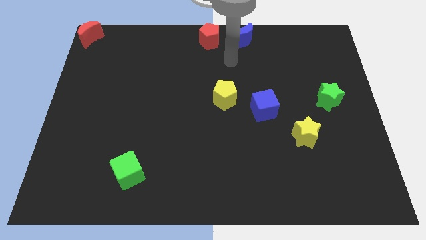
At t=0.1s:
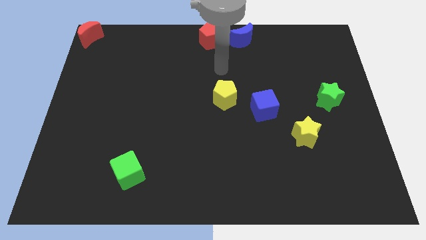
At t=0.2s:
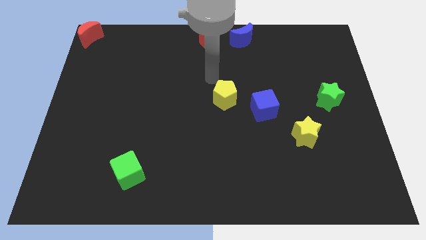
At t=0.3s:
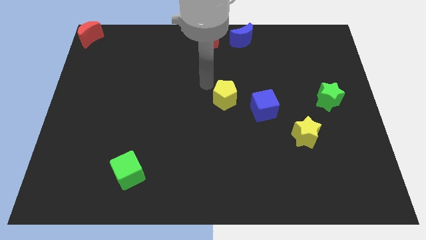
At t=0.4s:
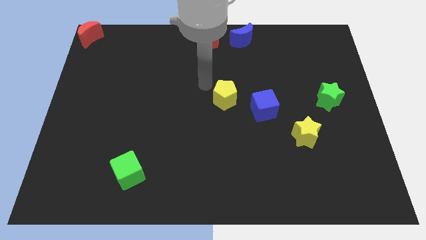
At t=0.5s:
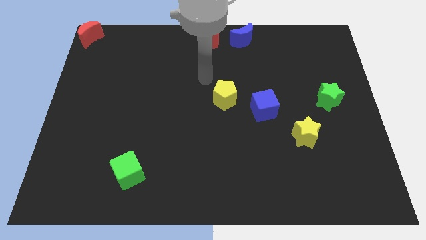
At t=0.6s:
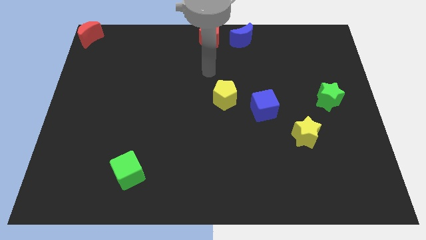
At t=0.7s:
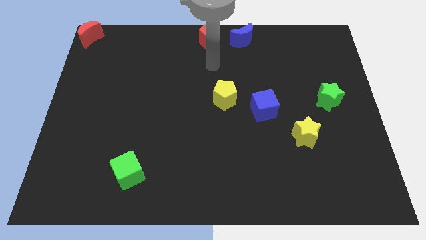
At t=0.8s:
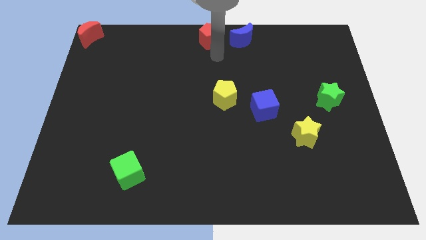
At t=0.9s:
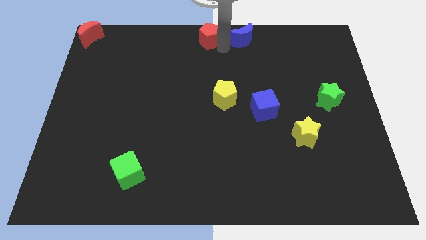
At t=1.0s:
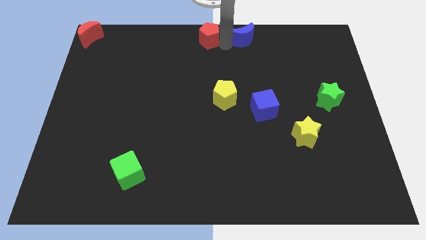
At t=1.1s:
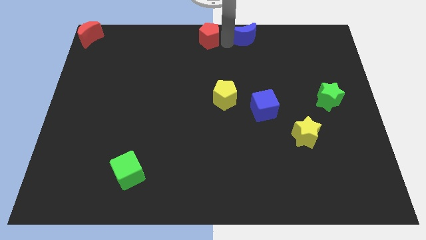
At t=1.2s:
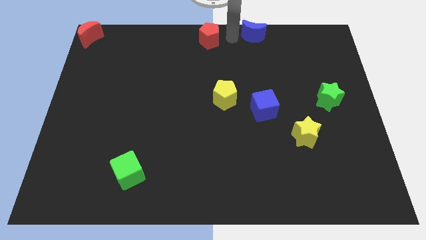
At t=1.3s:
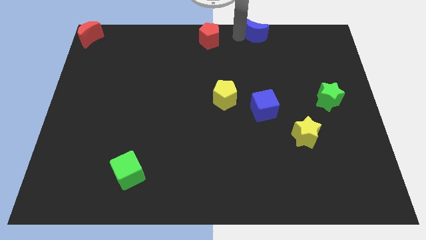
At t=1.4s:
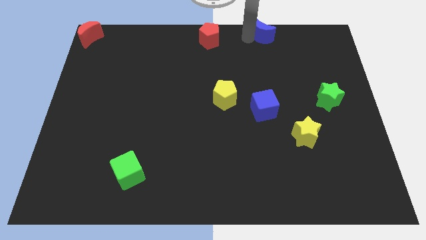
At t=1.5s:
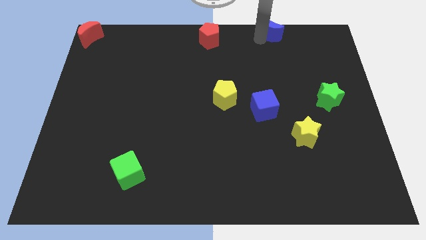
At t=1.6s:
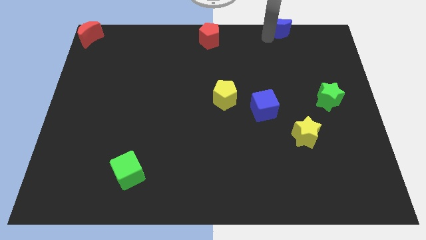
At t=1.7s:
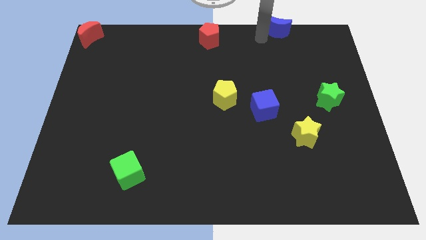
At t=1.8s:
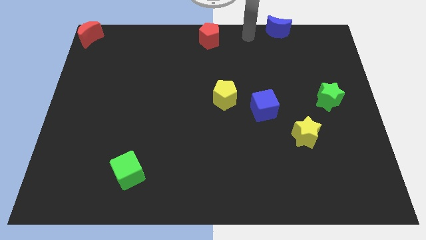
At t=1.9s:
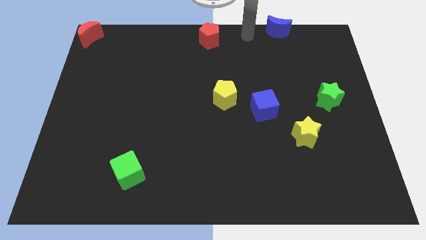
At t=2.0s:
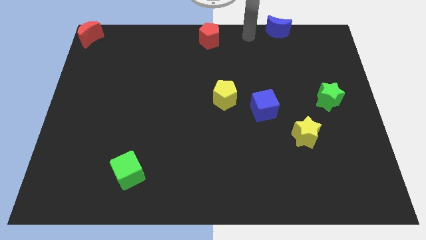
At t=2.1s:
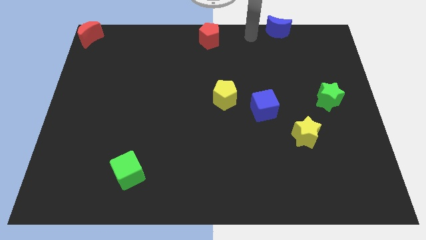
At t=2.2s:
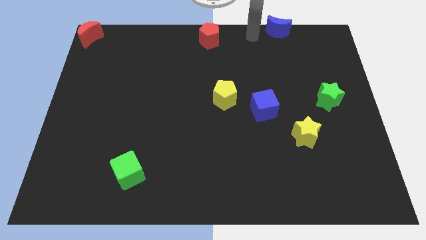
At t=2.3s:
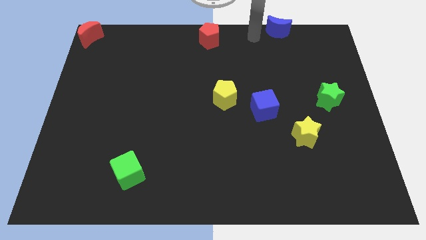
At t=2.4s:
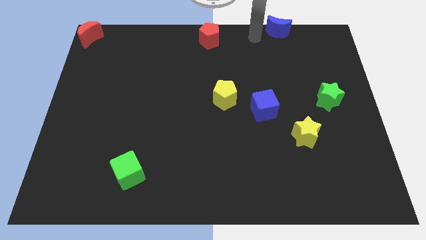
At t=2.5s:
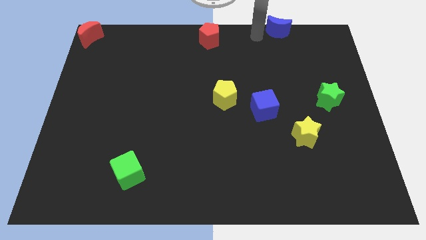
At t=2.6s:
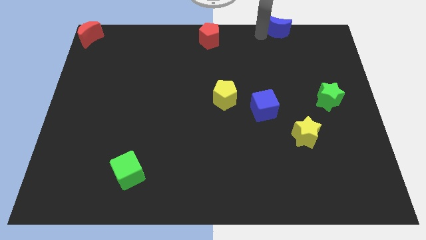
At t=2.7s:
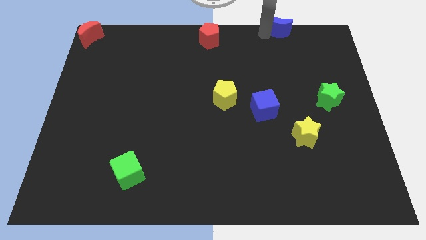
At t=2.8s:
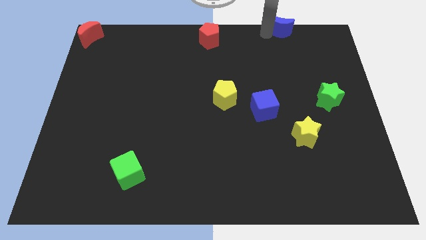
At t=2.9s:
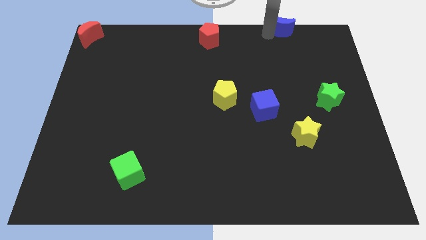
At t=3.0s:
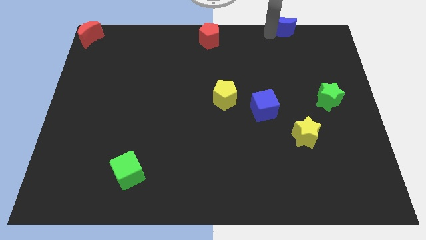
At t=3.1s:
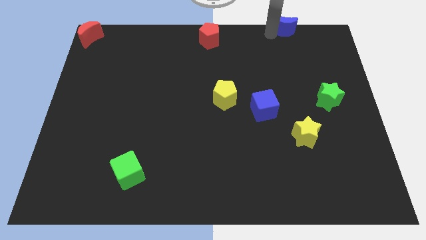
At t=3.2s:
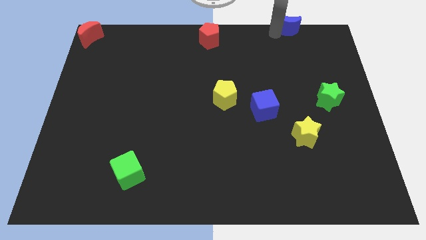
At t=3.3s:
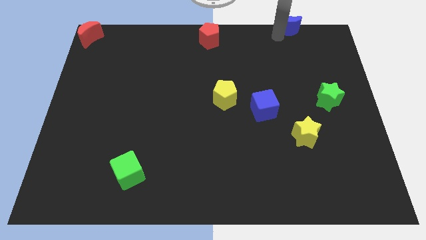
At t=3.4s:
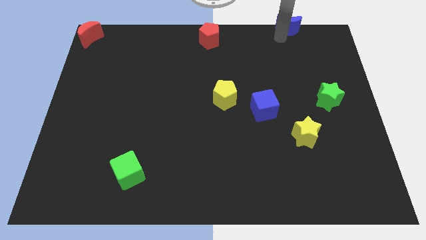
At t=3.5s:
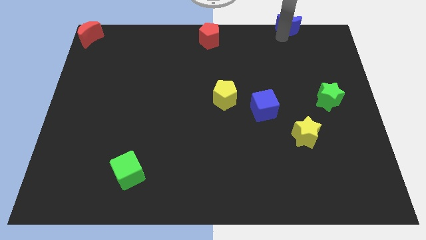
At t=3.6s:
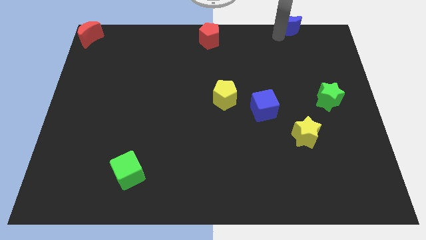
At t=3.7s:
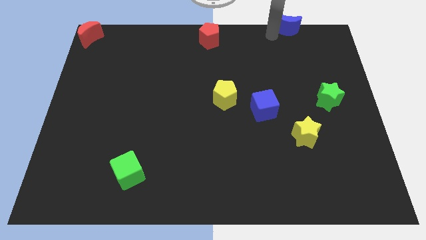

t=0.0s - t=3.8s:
move the blue crescent away from the red pentagon

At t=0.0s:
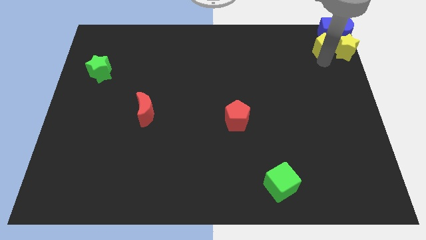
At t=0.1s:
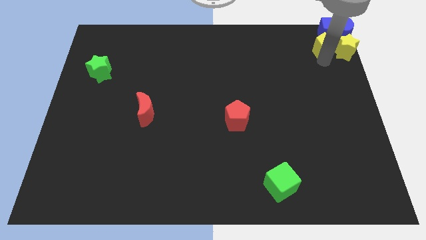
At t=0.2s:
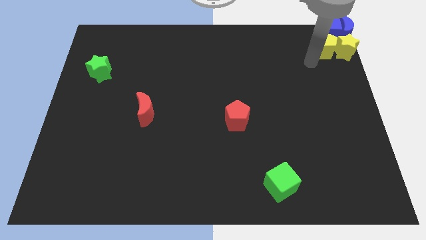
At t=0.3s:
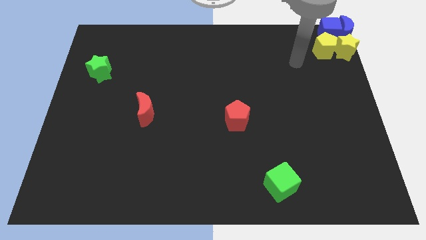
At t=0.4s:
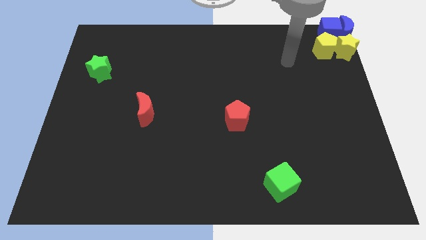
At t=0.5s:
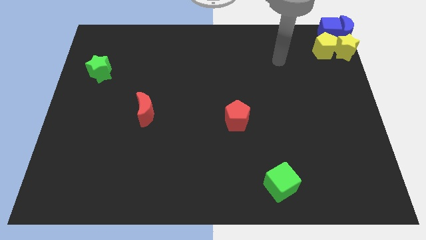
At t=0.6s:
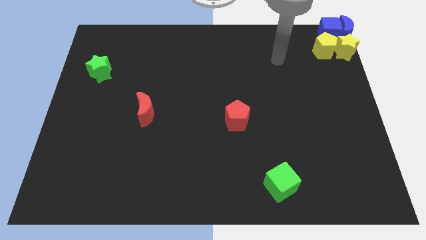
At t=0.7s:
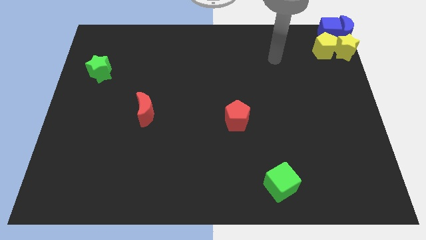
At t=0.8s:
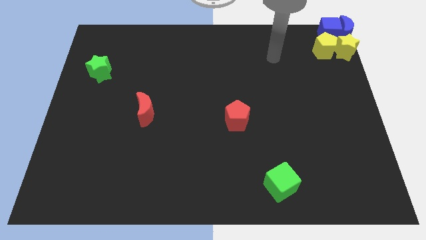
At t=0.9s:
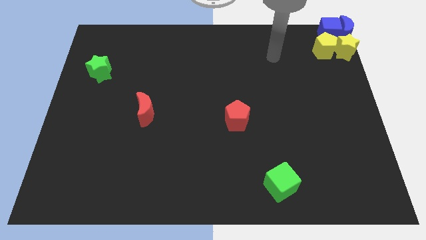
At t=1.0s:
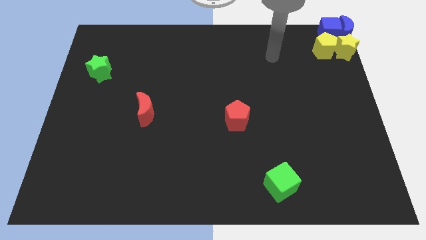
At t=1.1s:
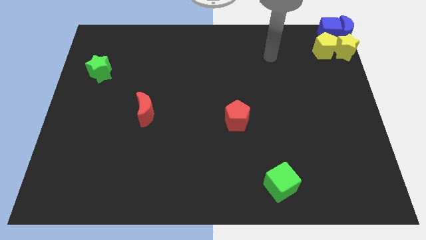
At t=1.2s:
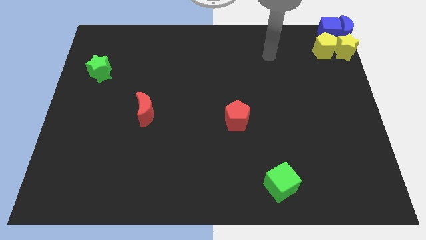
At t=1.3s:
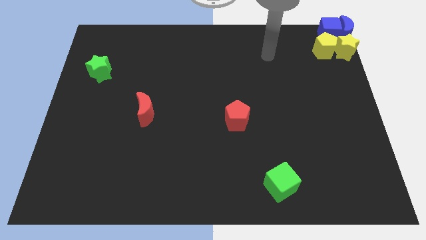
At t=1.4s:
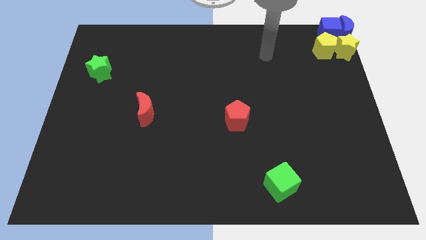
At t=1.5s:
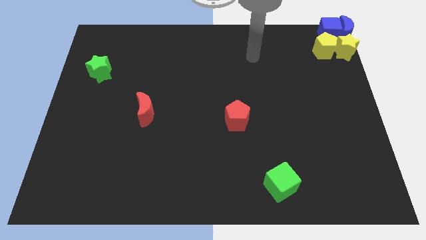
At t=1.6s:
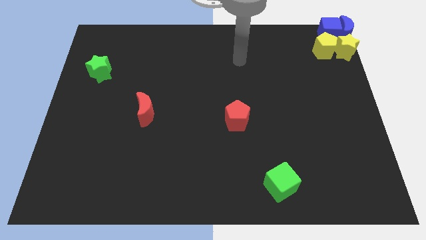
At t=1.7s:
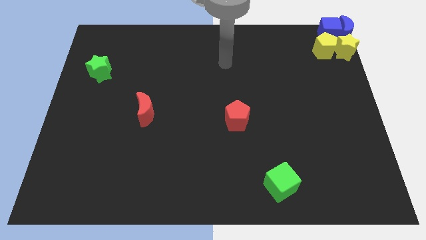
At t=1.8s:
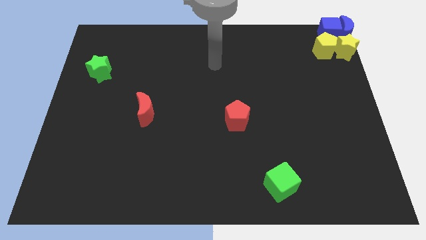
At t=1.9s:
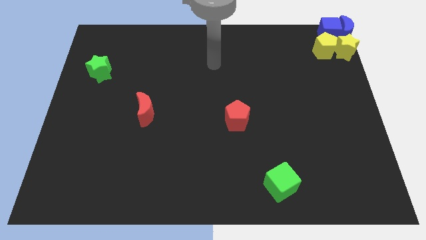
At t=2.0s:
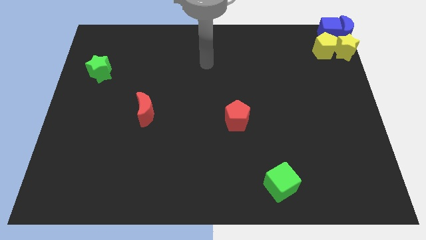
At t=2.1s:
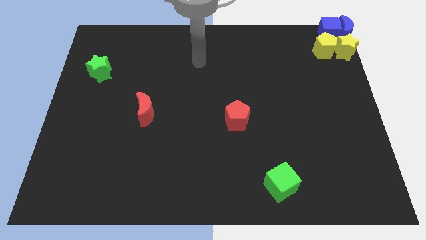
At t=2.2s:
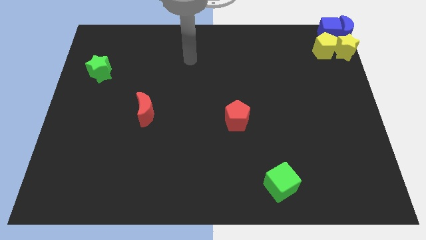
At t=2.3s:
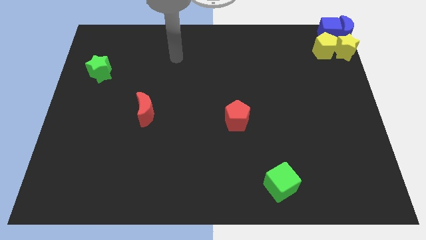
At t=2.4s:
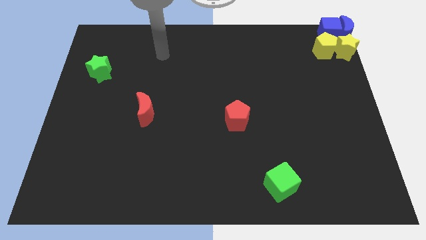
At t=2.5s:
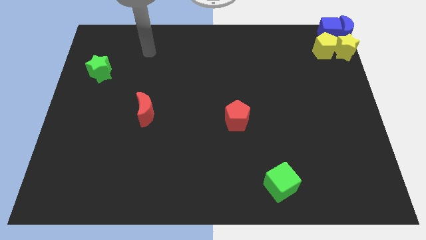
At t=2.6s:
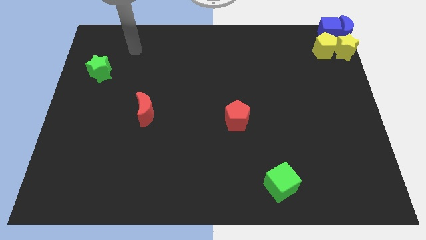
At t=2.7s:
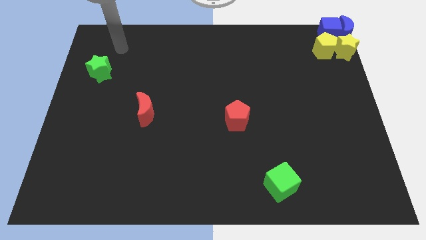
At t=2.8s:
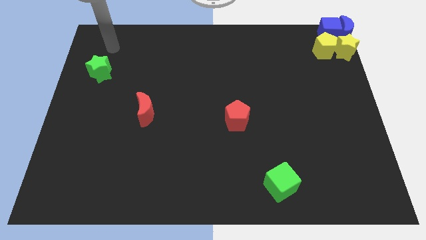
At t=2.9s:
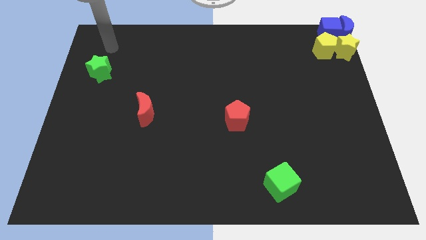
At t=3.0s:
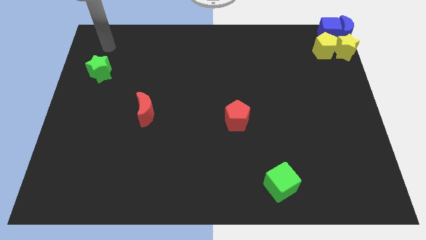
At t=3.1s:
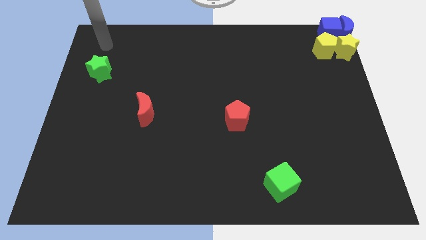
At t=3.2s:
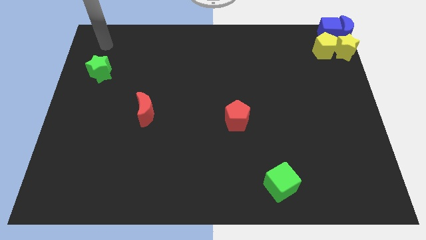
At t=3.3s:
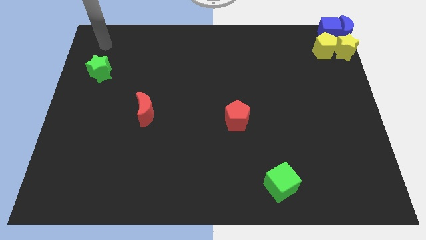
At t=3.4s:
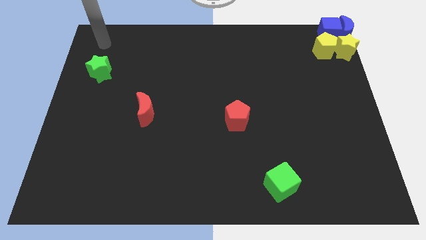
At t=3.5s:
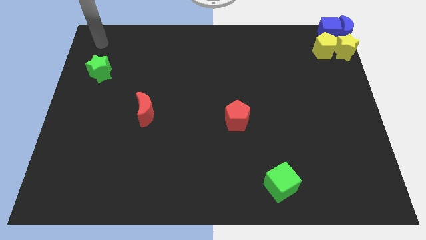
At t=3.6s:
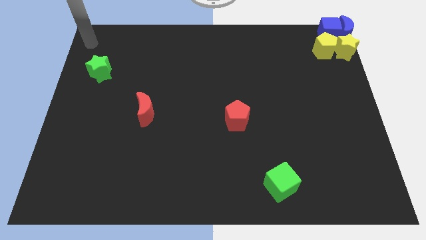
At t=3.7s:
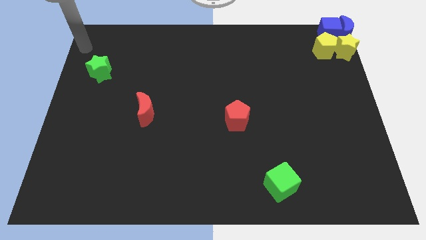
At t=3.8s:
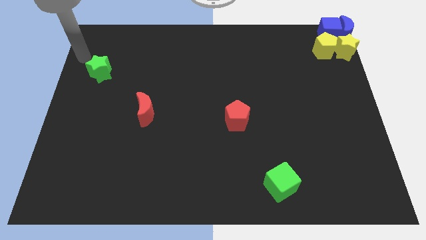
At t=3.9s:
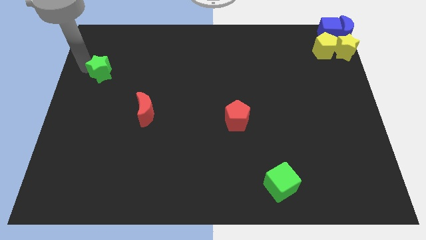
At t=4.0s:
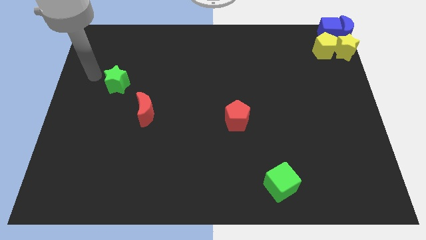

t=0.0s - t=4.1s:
go away from the yellow pentagon

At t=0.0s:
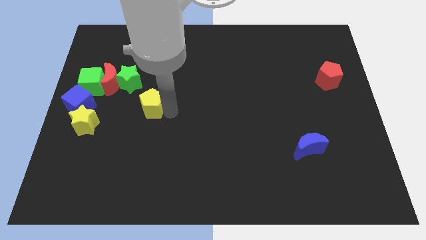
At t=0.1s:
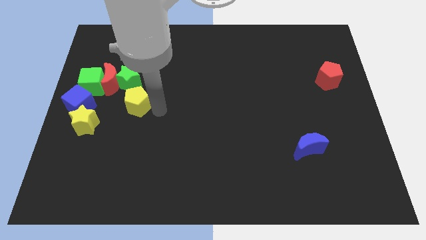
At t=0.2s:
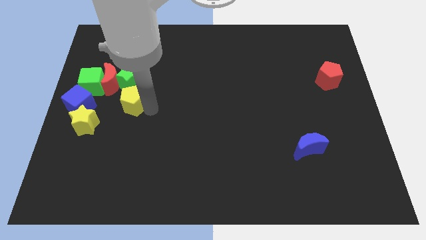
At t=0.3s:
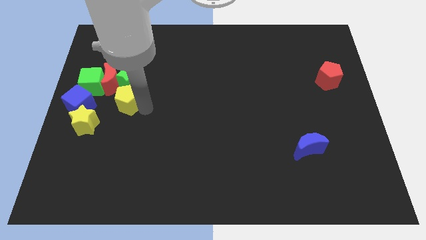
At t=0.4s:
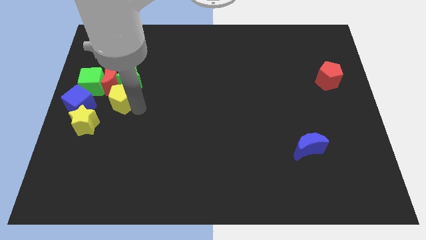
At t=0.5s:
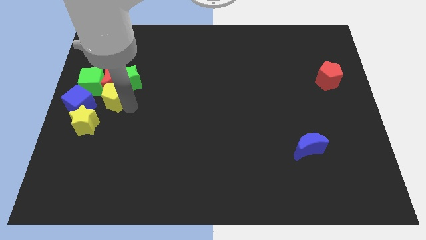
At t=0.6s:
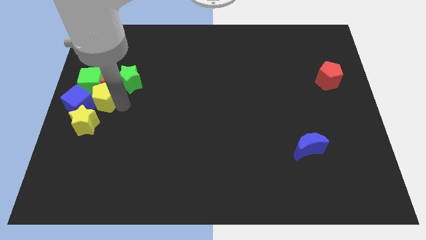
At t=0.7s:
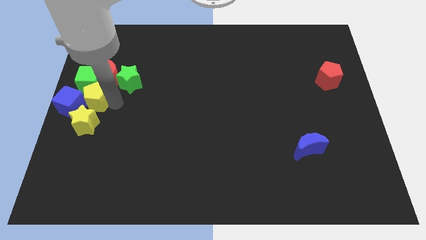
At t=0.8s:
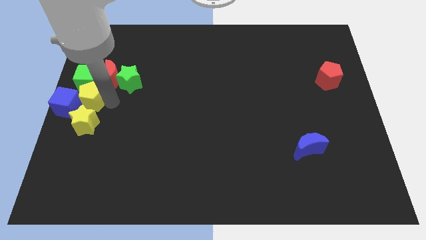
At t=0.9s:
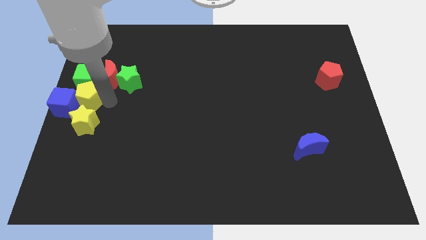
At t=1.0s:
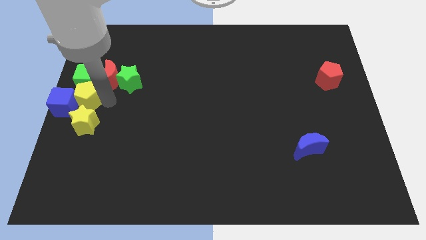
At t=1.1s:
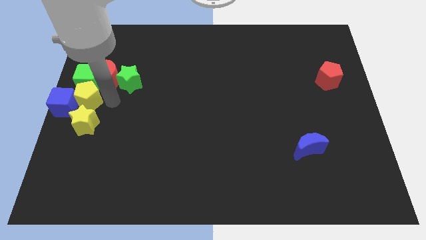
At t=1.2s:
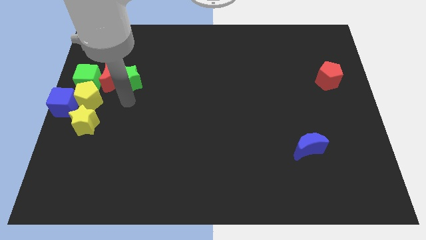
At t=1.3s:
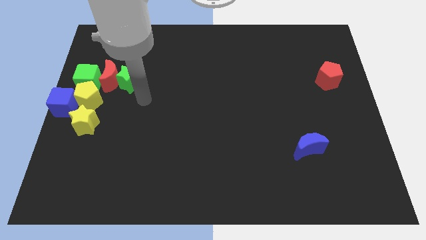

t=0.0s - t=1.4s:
push the yellow pentagon right to the blue cube
